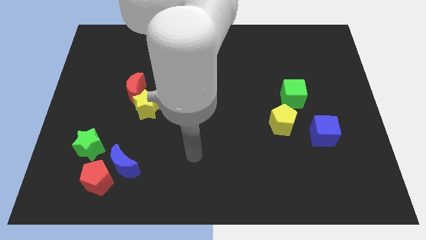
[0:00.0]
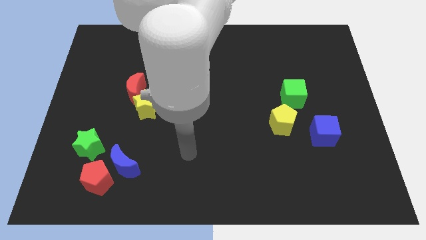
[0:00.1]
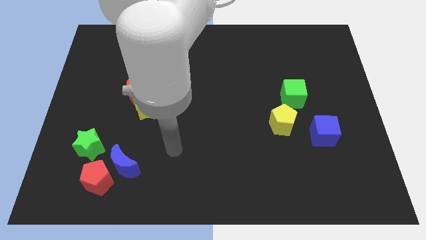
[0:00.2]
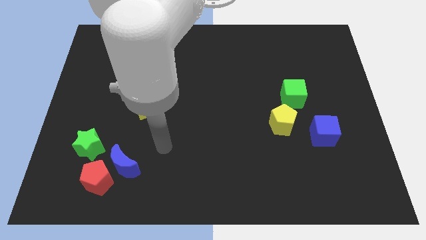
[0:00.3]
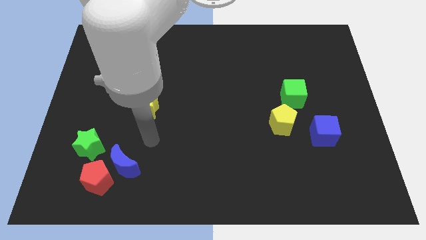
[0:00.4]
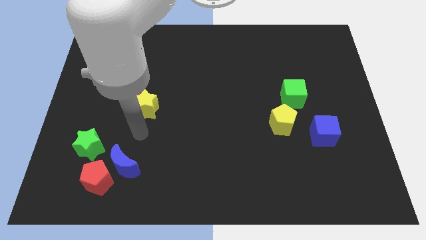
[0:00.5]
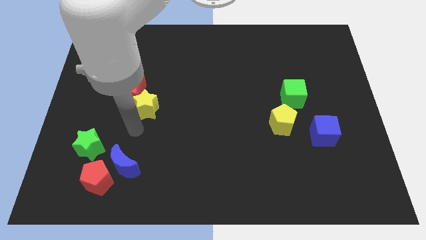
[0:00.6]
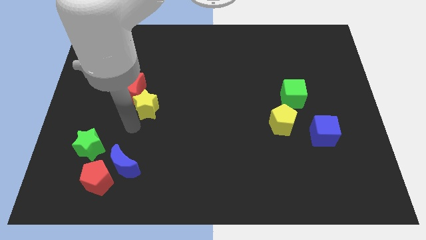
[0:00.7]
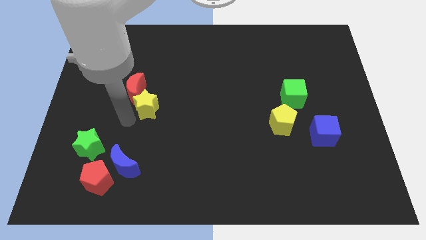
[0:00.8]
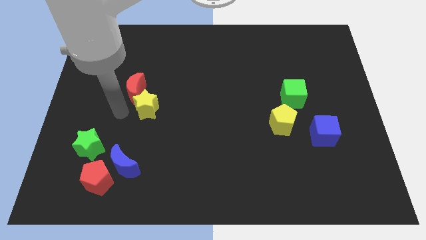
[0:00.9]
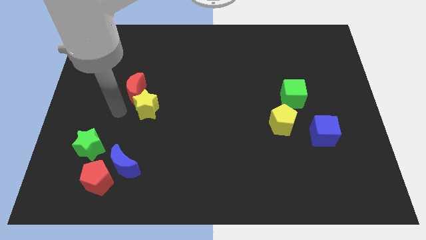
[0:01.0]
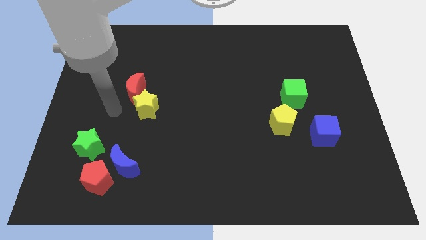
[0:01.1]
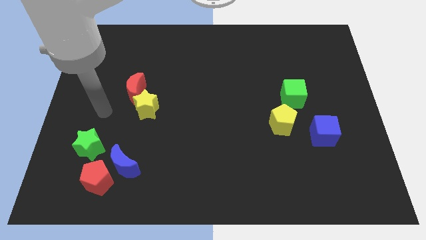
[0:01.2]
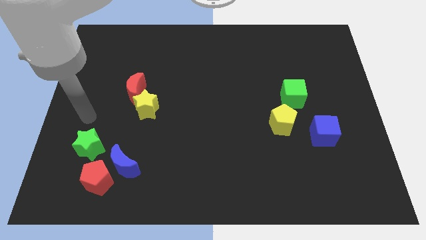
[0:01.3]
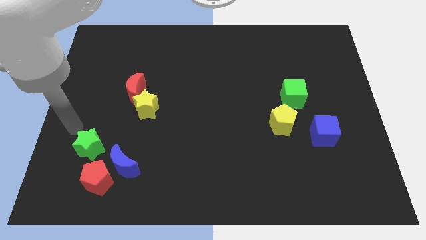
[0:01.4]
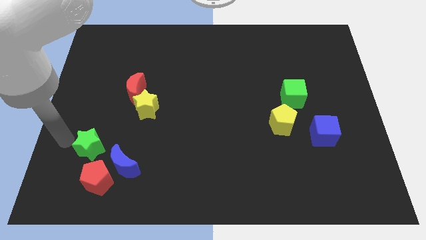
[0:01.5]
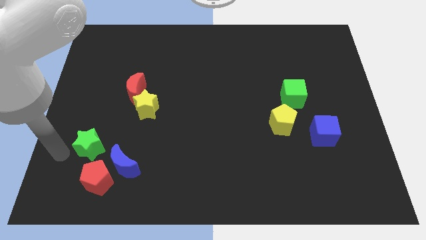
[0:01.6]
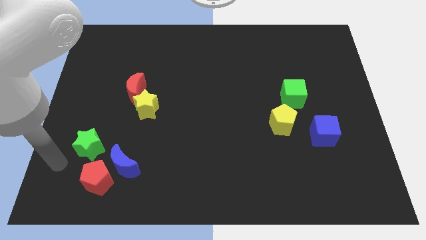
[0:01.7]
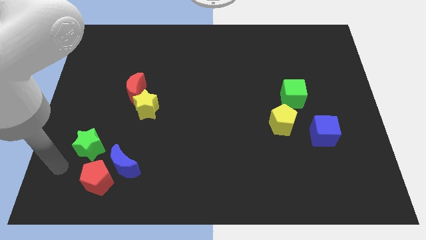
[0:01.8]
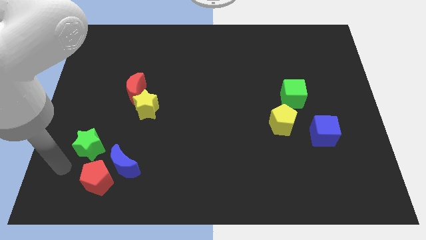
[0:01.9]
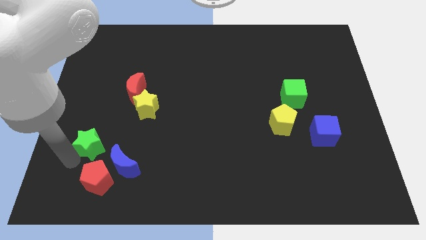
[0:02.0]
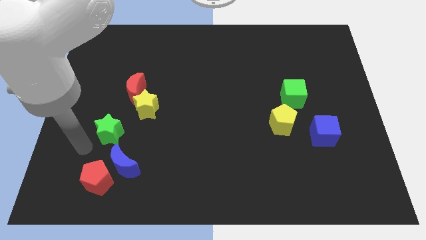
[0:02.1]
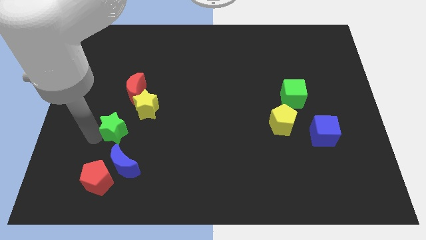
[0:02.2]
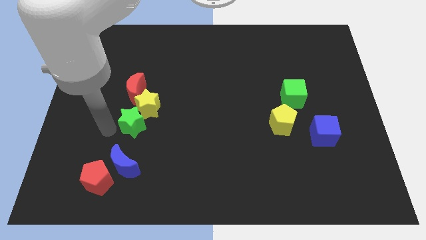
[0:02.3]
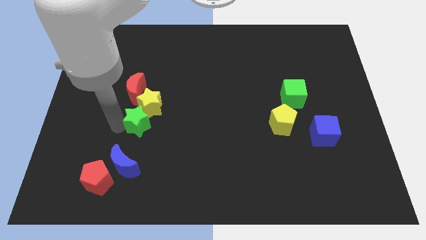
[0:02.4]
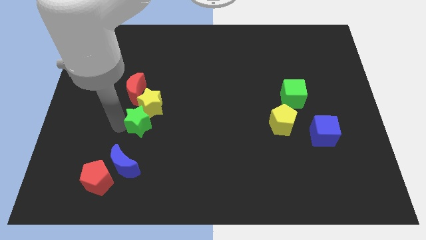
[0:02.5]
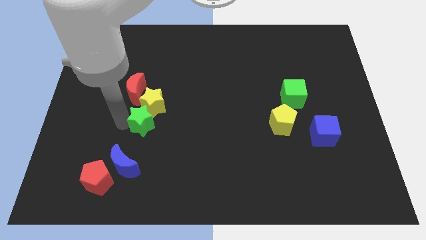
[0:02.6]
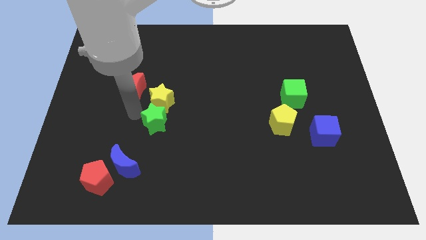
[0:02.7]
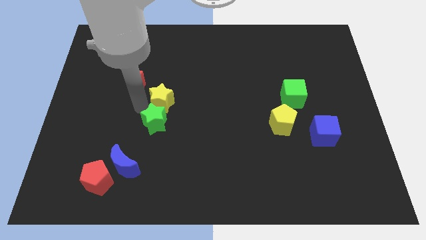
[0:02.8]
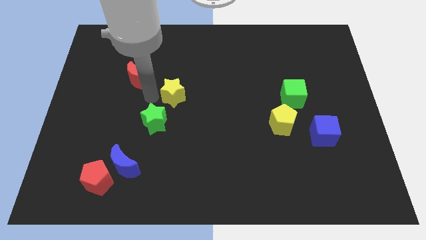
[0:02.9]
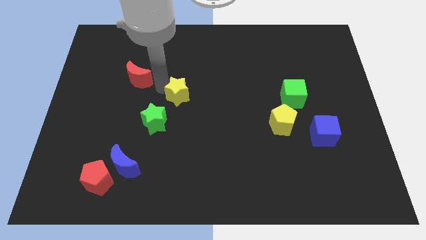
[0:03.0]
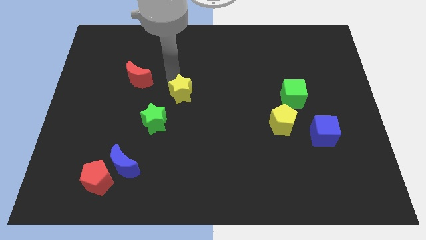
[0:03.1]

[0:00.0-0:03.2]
place the yellow star on the top right side of the green star

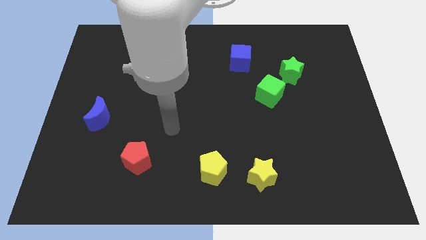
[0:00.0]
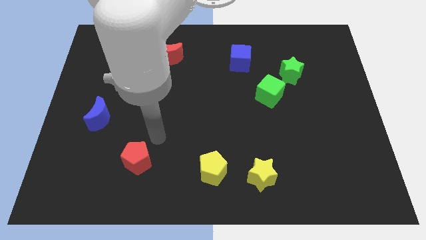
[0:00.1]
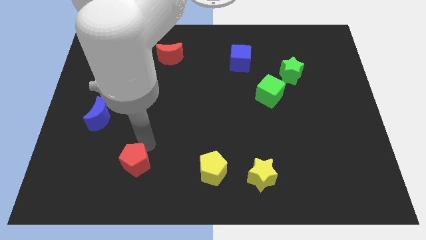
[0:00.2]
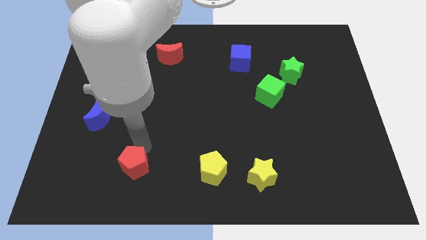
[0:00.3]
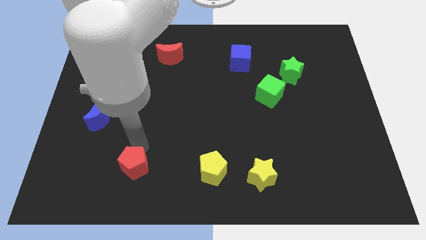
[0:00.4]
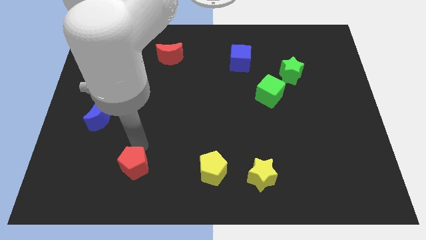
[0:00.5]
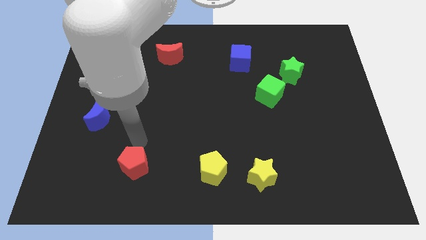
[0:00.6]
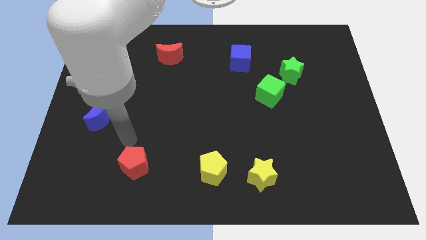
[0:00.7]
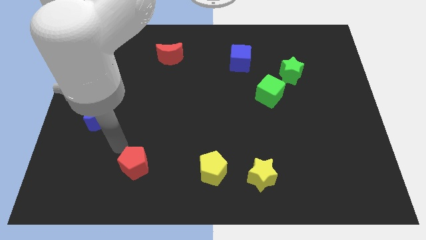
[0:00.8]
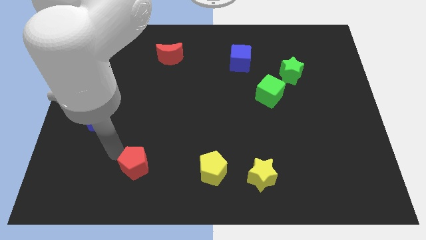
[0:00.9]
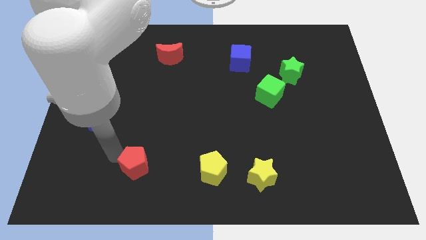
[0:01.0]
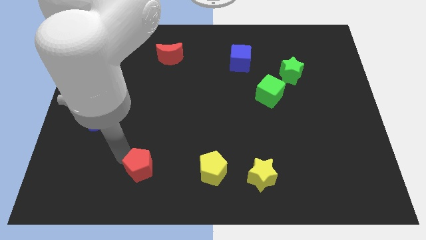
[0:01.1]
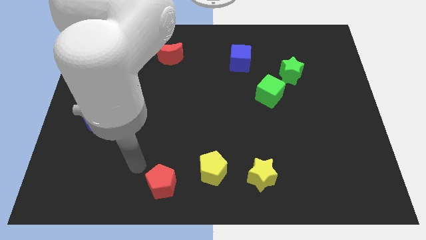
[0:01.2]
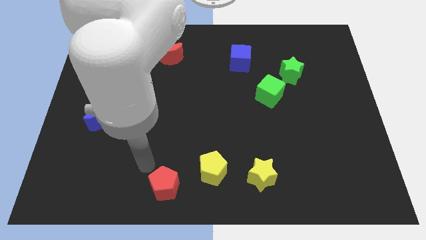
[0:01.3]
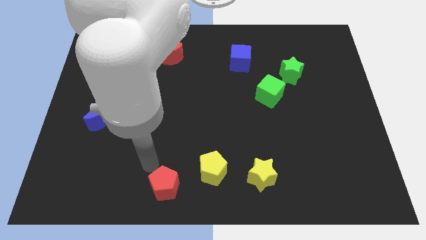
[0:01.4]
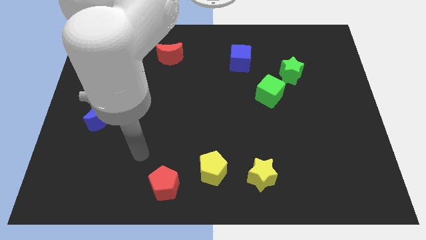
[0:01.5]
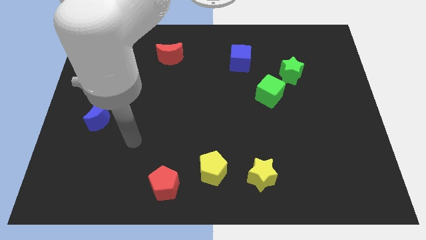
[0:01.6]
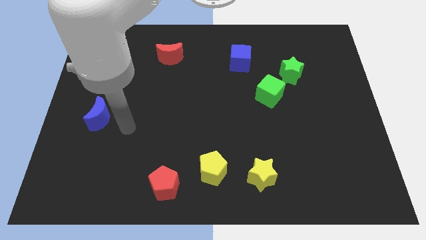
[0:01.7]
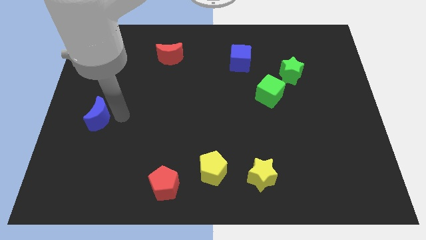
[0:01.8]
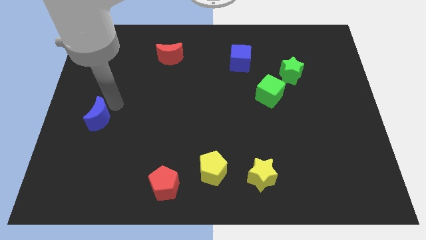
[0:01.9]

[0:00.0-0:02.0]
move the red pentagon below the red crescent

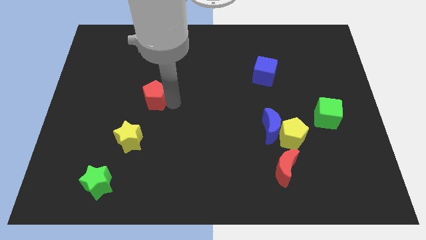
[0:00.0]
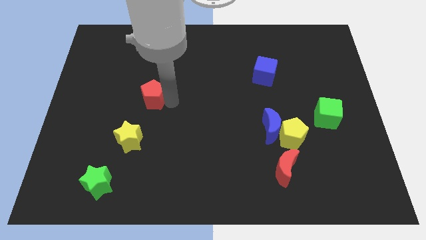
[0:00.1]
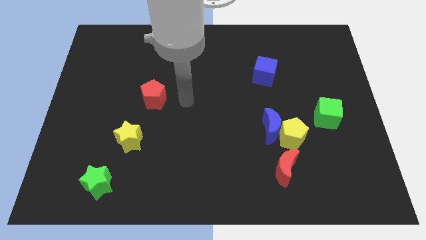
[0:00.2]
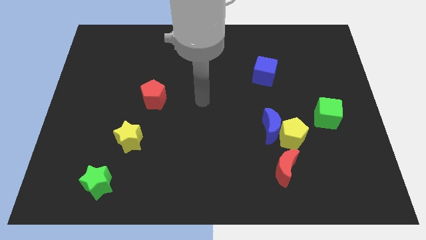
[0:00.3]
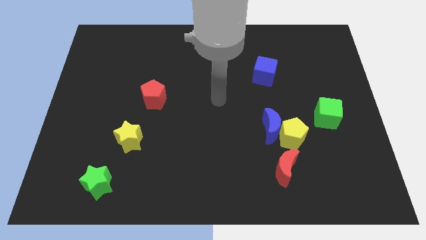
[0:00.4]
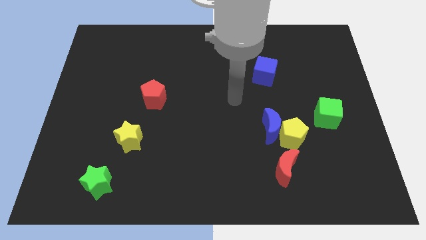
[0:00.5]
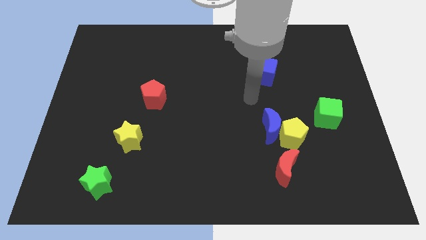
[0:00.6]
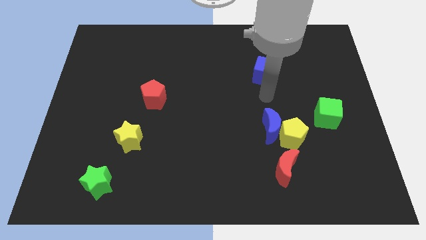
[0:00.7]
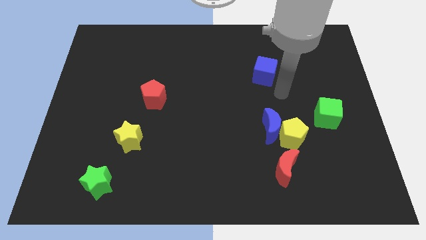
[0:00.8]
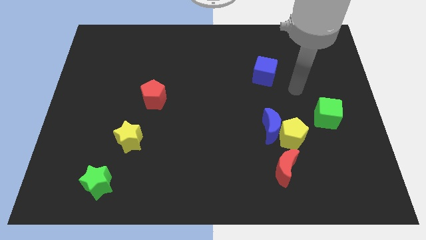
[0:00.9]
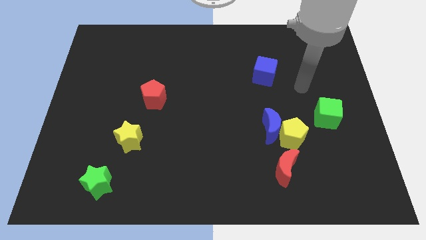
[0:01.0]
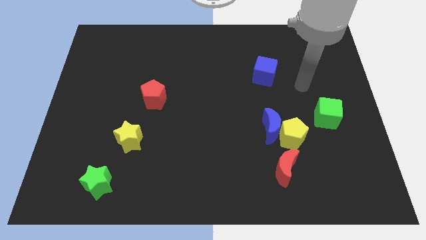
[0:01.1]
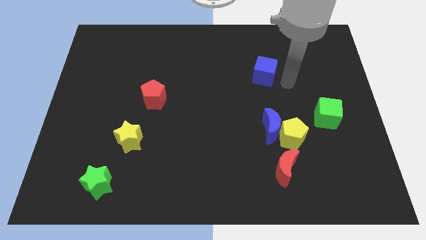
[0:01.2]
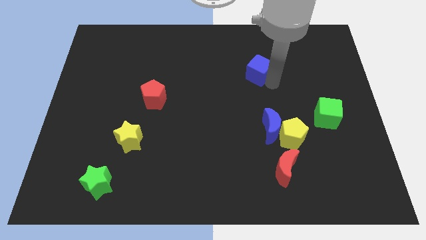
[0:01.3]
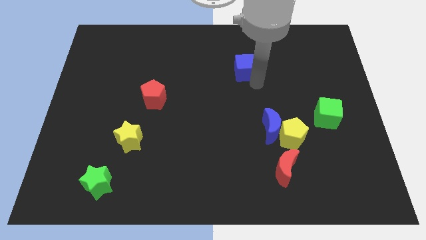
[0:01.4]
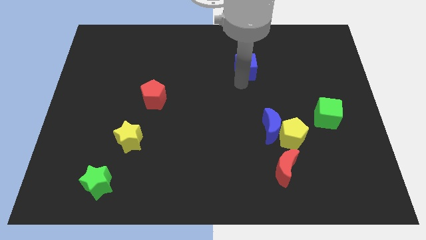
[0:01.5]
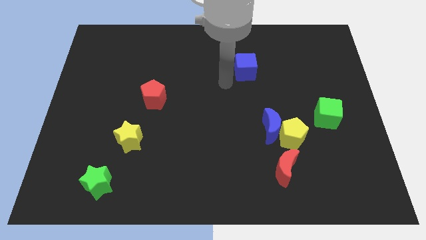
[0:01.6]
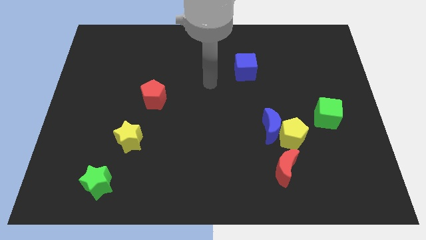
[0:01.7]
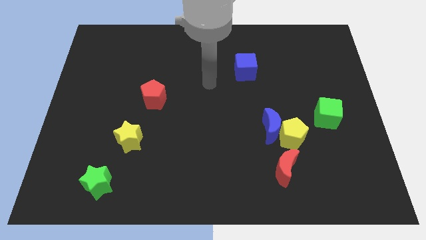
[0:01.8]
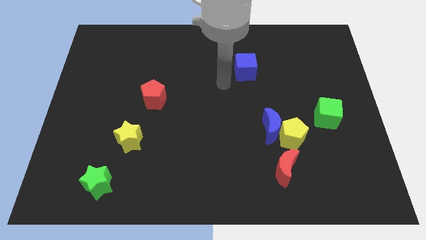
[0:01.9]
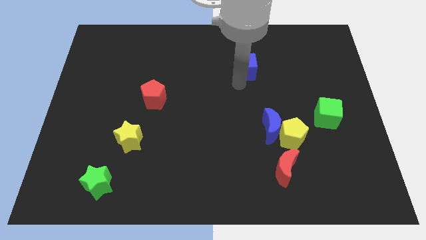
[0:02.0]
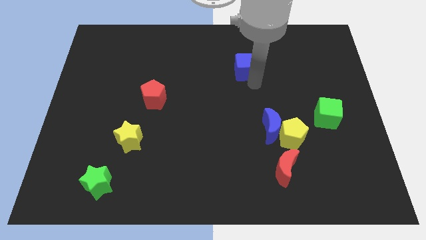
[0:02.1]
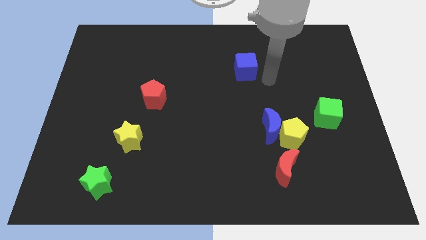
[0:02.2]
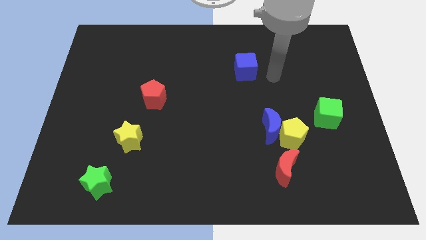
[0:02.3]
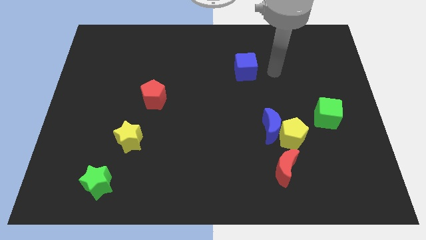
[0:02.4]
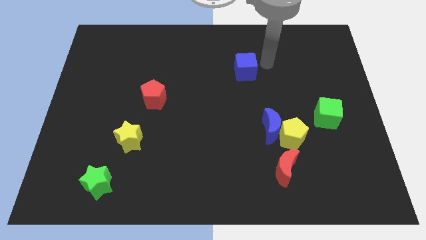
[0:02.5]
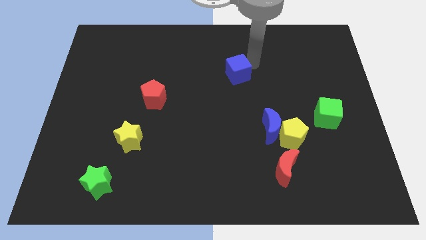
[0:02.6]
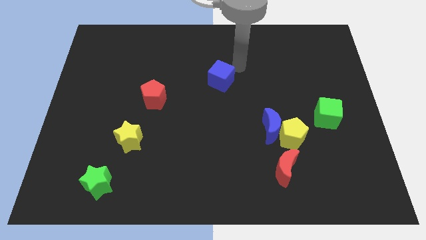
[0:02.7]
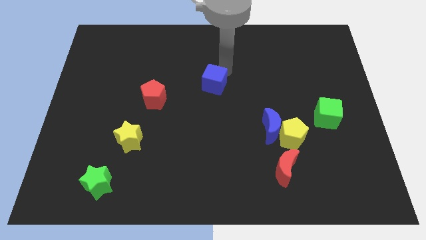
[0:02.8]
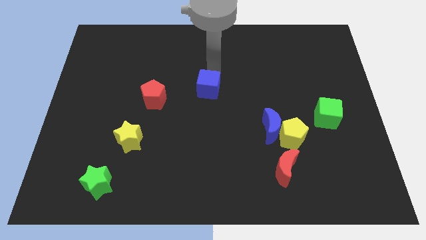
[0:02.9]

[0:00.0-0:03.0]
move the blue cube diagonally to the left of the blue moon

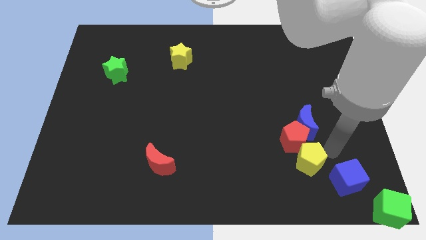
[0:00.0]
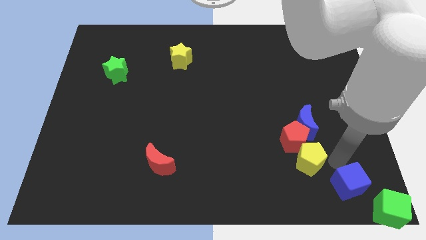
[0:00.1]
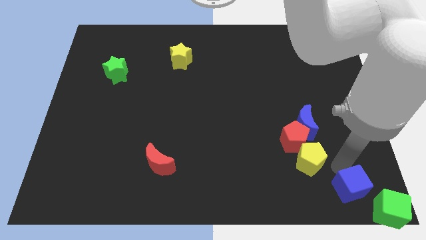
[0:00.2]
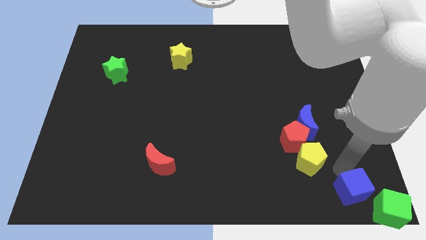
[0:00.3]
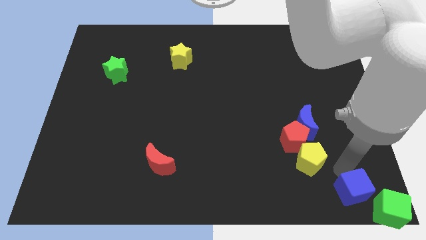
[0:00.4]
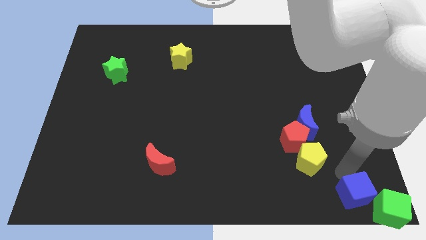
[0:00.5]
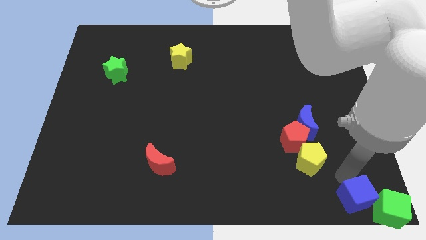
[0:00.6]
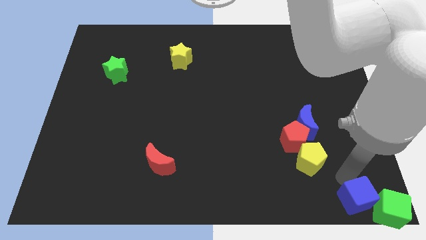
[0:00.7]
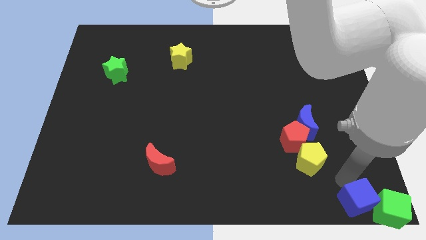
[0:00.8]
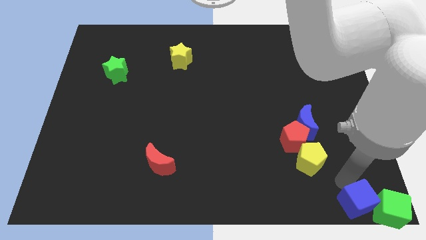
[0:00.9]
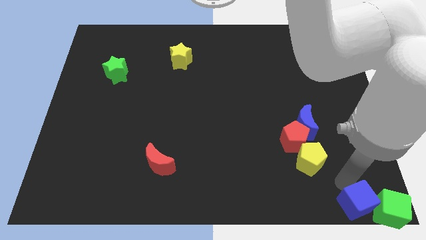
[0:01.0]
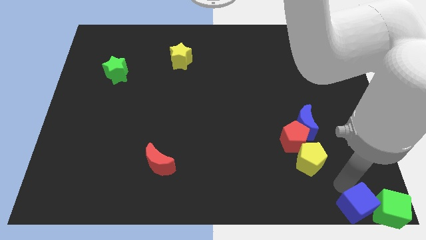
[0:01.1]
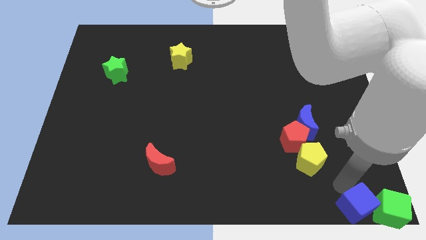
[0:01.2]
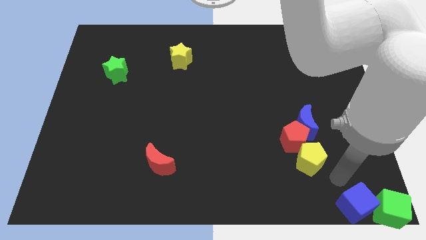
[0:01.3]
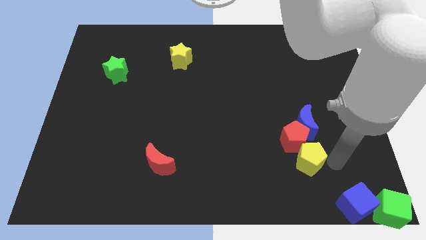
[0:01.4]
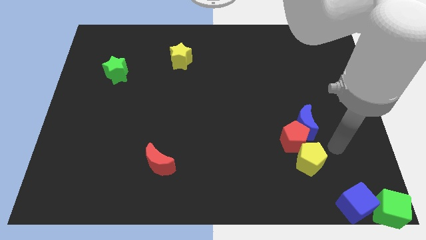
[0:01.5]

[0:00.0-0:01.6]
place blue moon at the left side of the green cube
